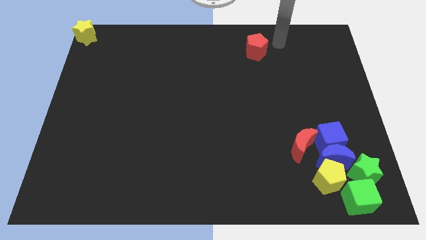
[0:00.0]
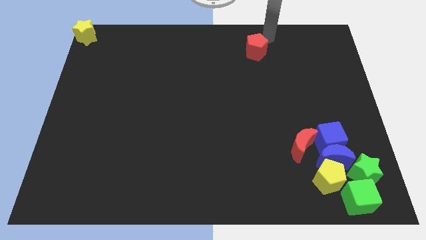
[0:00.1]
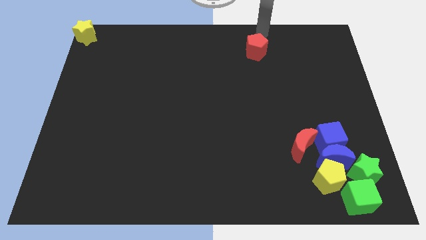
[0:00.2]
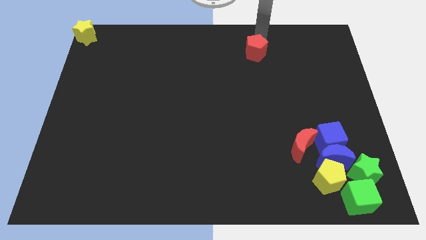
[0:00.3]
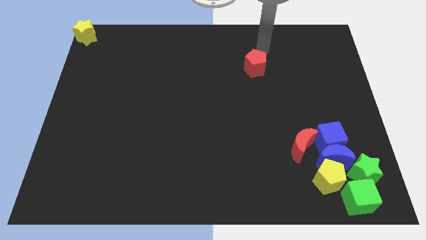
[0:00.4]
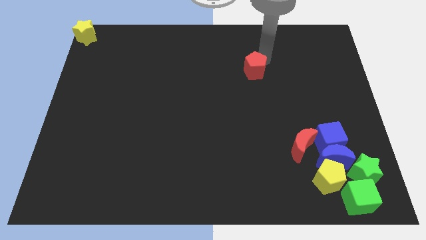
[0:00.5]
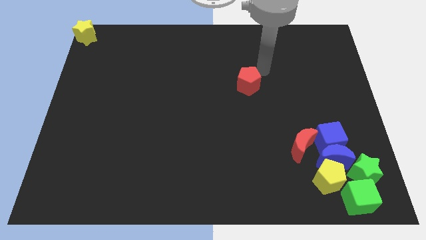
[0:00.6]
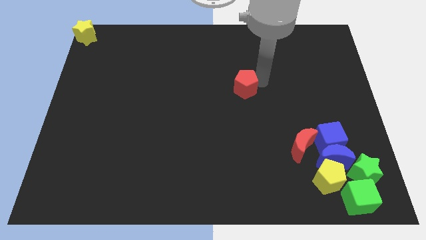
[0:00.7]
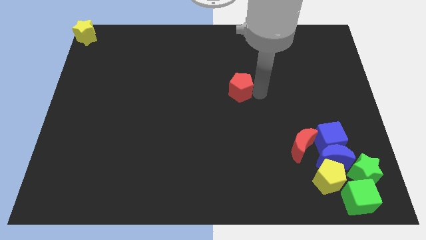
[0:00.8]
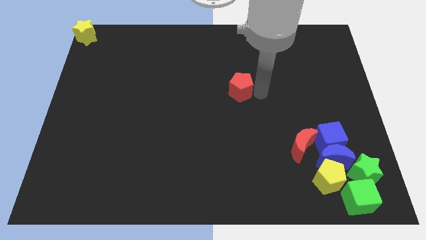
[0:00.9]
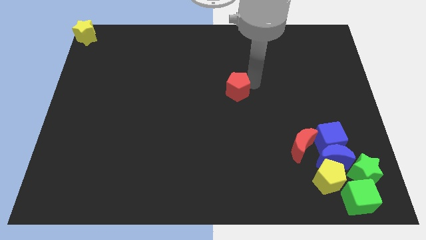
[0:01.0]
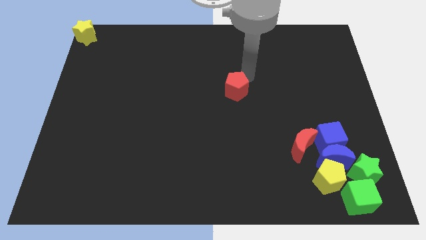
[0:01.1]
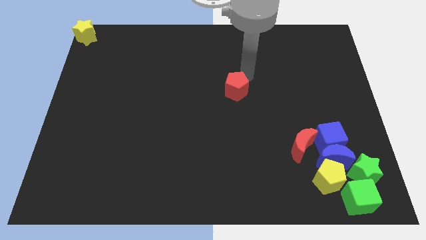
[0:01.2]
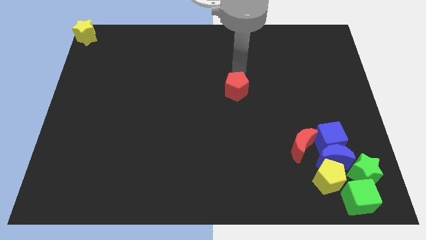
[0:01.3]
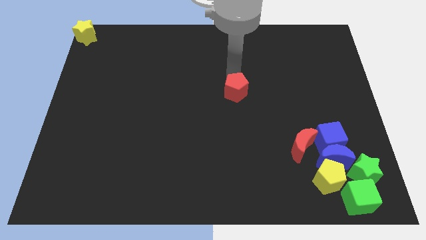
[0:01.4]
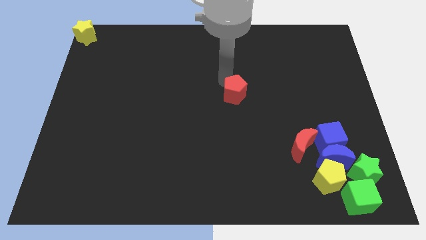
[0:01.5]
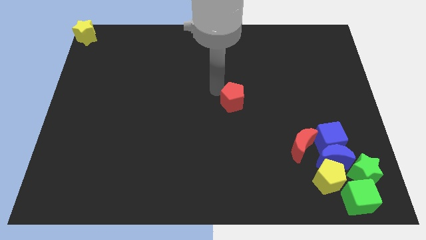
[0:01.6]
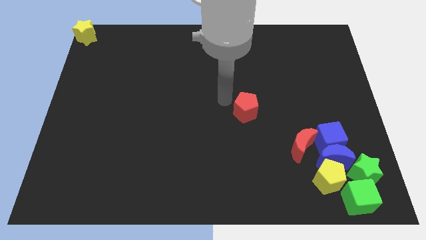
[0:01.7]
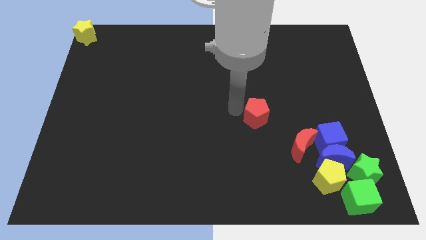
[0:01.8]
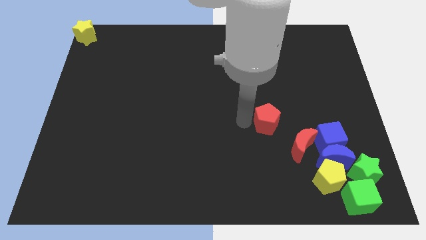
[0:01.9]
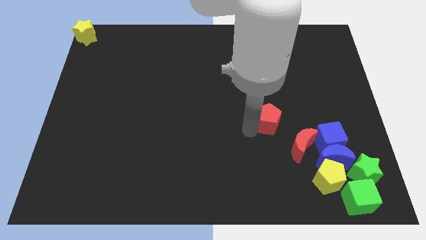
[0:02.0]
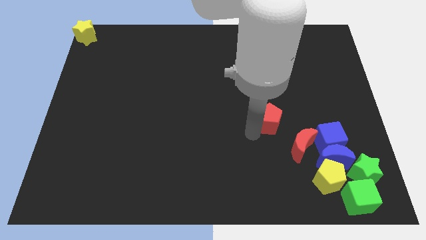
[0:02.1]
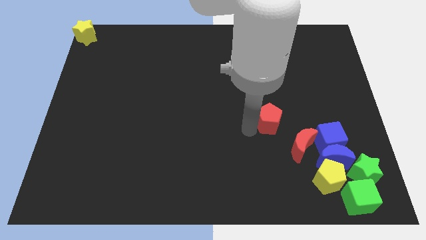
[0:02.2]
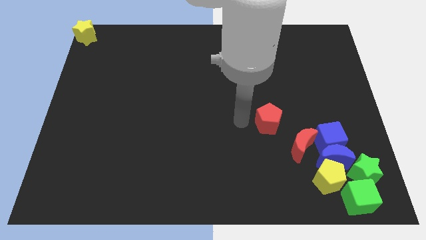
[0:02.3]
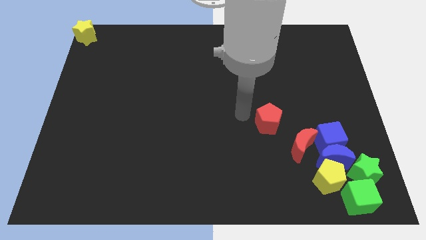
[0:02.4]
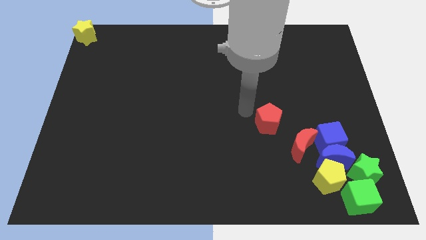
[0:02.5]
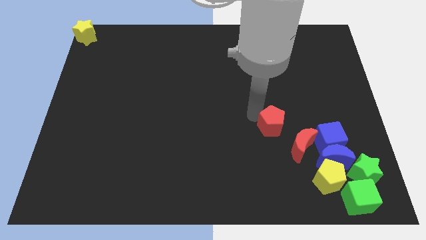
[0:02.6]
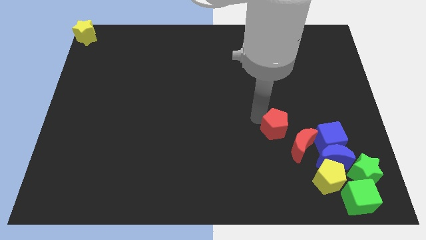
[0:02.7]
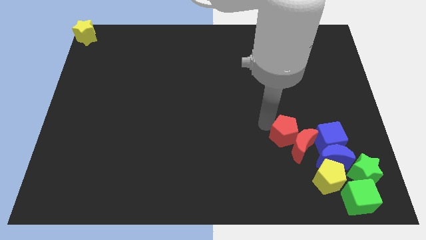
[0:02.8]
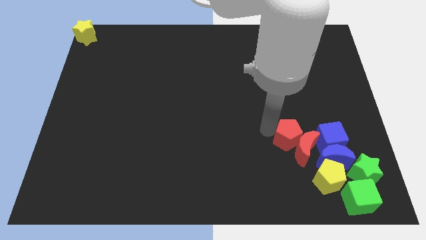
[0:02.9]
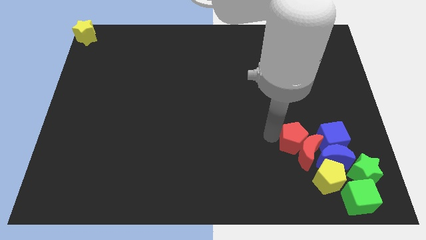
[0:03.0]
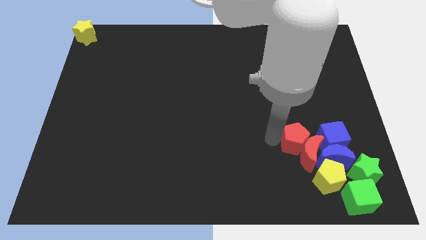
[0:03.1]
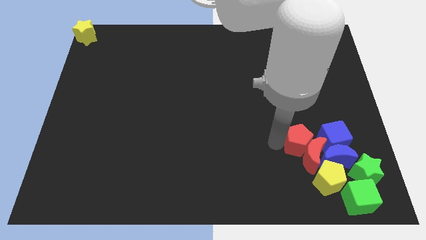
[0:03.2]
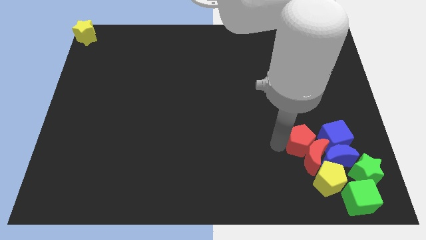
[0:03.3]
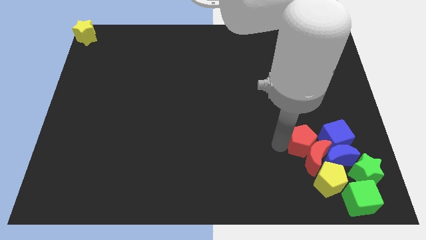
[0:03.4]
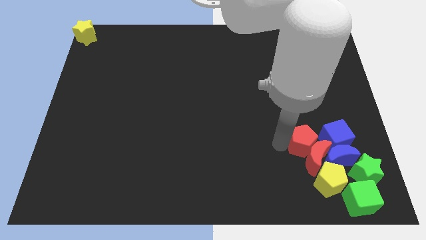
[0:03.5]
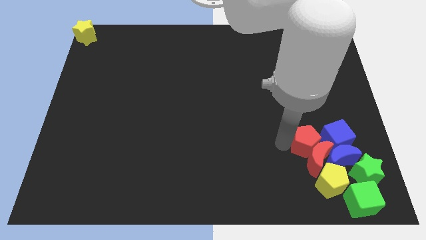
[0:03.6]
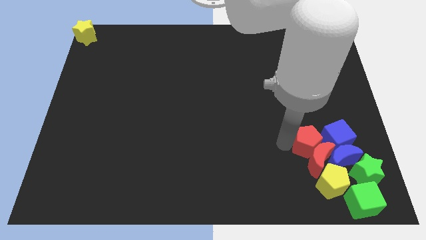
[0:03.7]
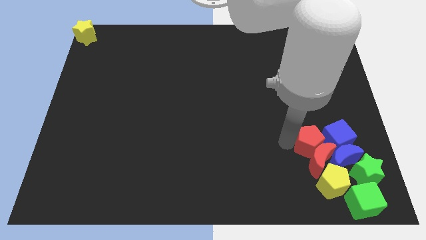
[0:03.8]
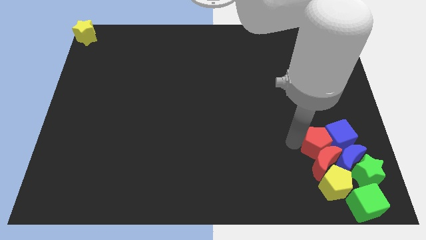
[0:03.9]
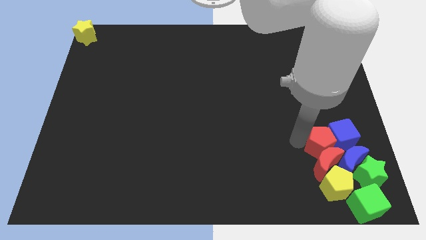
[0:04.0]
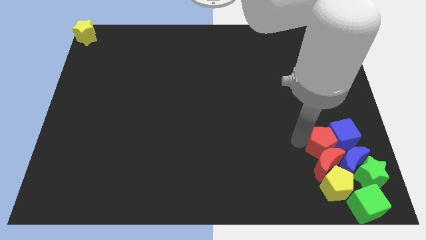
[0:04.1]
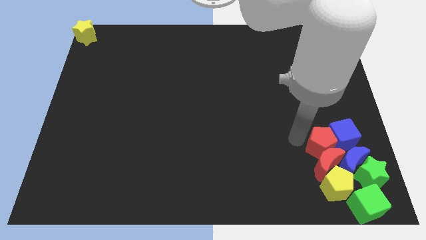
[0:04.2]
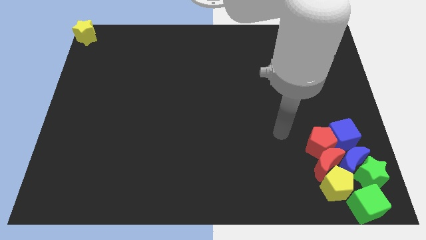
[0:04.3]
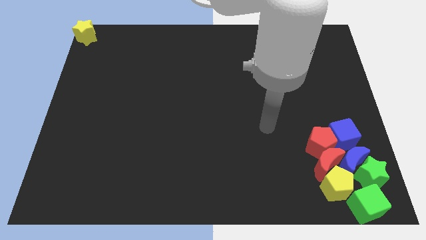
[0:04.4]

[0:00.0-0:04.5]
push the red pentagon into a group of blocks

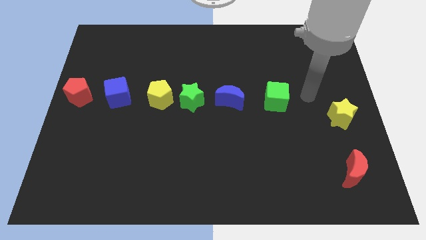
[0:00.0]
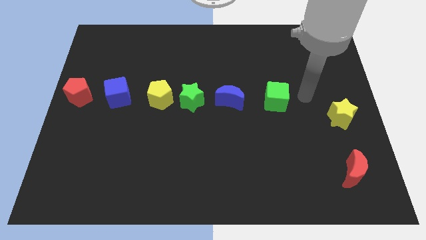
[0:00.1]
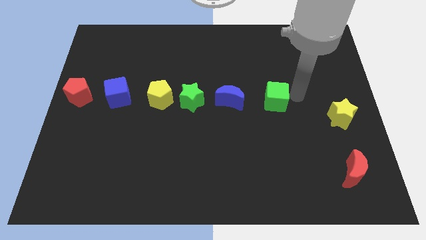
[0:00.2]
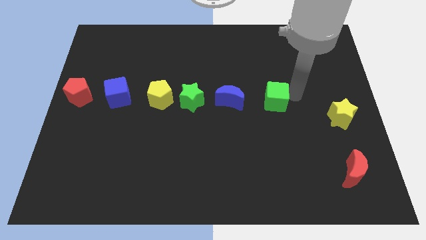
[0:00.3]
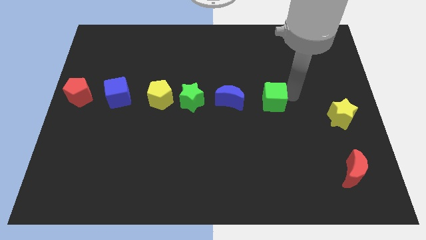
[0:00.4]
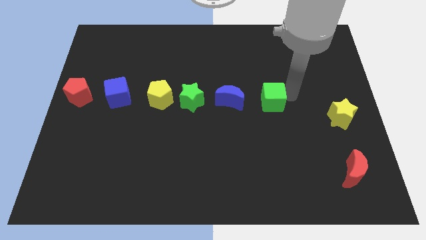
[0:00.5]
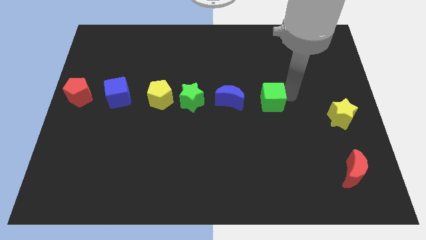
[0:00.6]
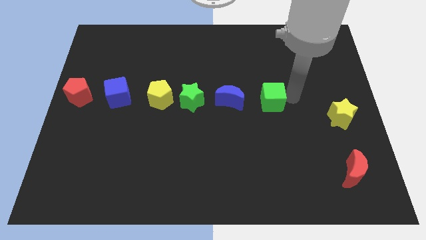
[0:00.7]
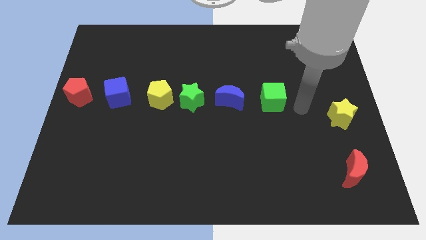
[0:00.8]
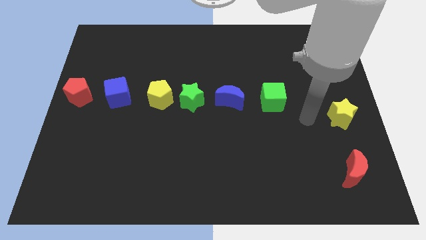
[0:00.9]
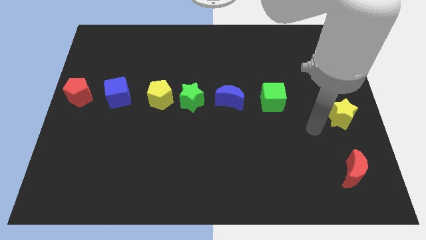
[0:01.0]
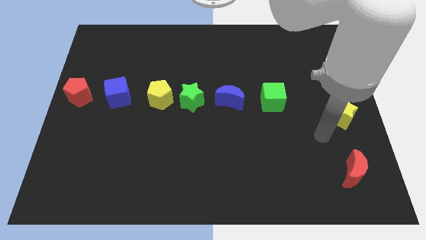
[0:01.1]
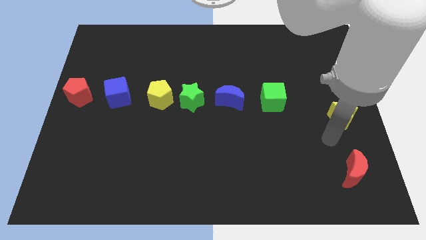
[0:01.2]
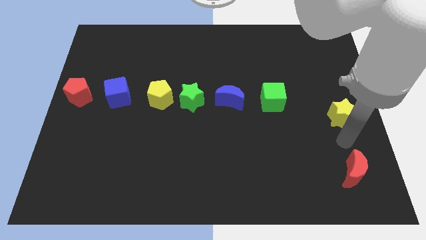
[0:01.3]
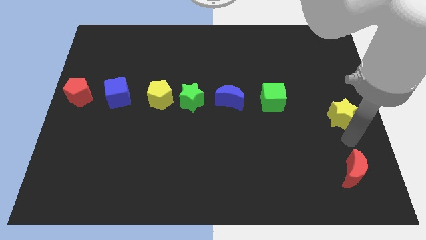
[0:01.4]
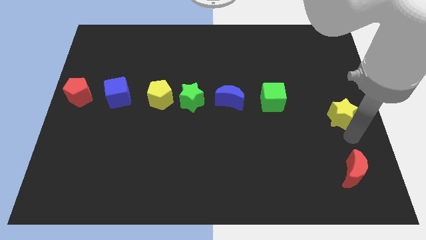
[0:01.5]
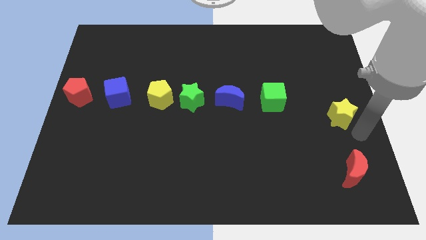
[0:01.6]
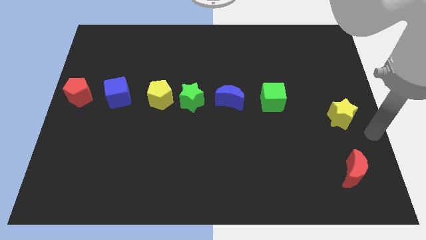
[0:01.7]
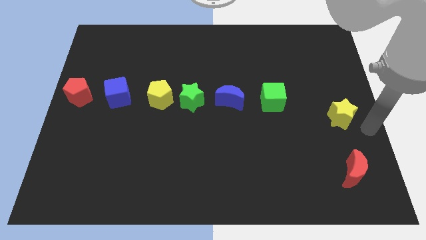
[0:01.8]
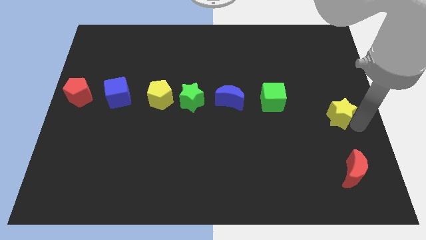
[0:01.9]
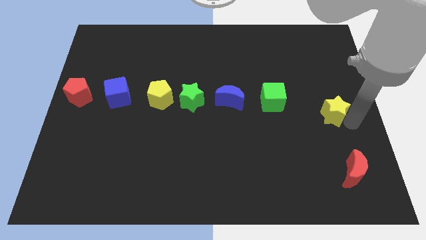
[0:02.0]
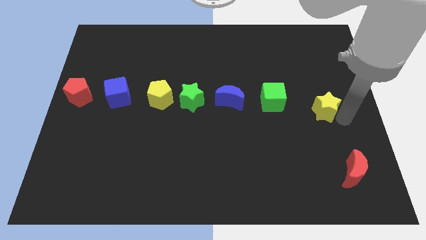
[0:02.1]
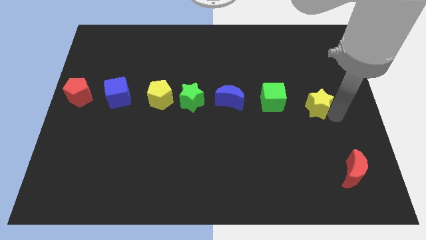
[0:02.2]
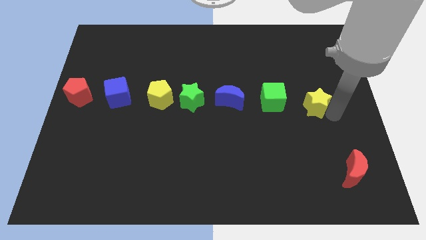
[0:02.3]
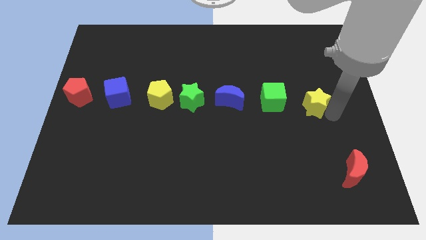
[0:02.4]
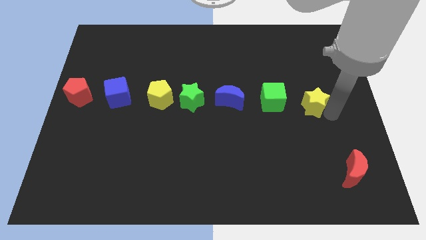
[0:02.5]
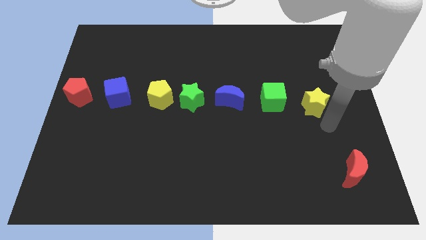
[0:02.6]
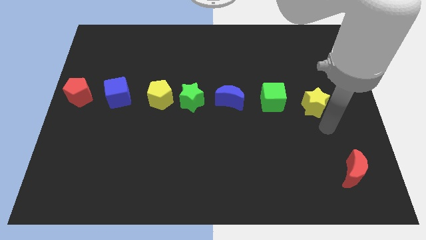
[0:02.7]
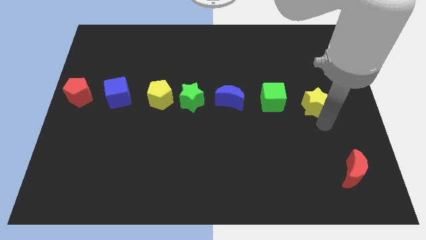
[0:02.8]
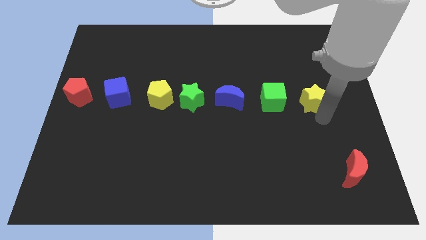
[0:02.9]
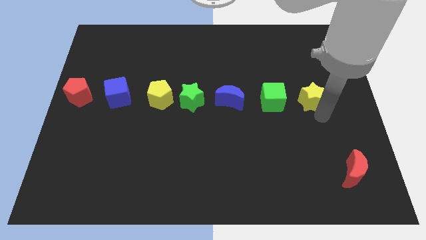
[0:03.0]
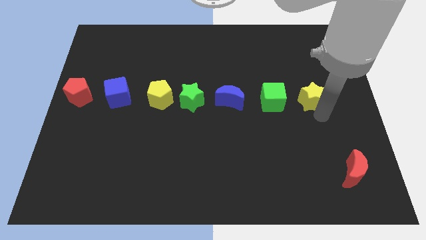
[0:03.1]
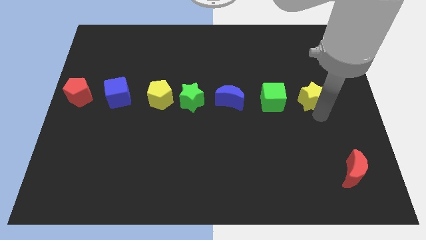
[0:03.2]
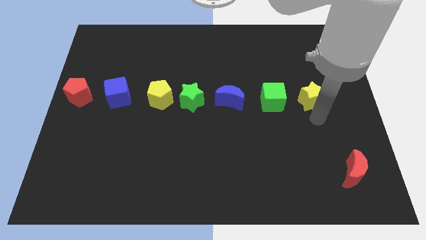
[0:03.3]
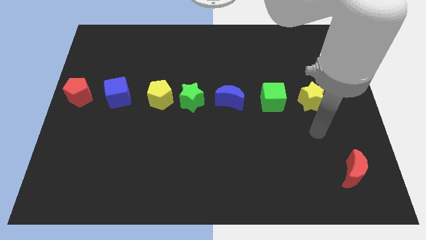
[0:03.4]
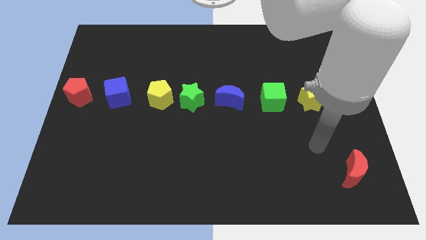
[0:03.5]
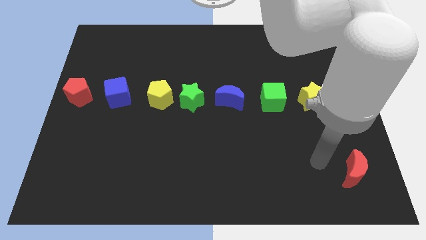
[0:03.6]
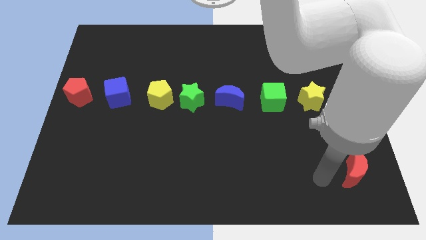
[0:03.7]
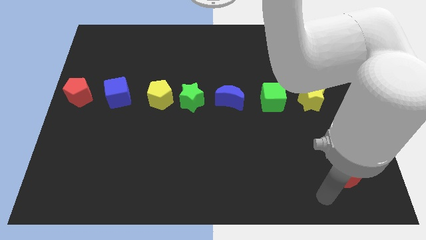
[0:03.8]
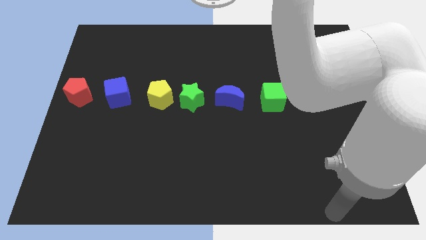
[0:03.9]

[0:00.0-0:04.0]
place yellow star to the right of the green cube

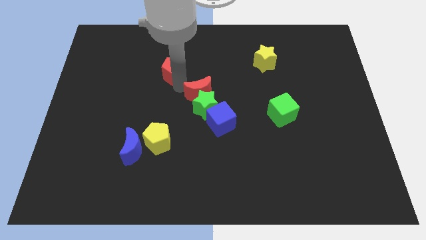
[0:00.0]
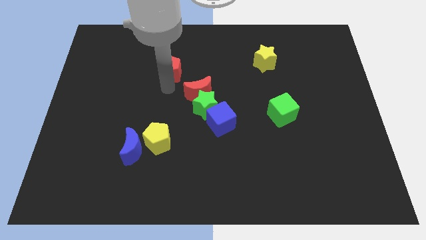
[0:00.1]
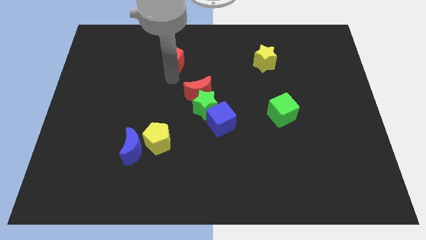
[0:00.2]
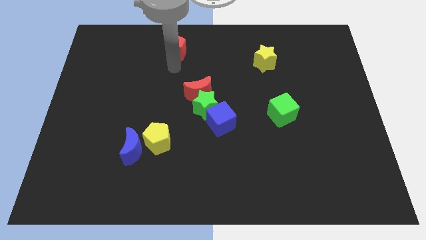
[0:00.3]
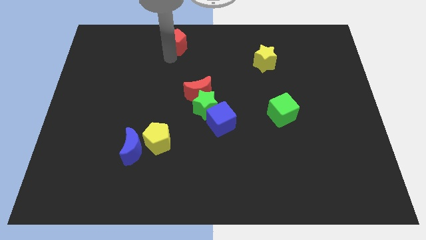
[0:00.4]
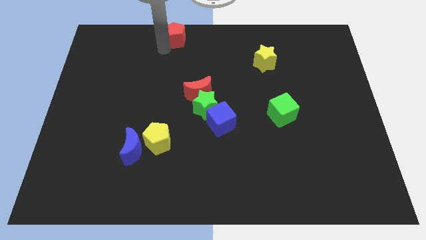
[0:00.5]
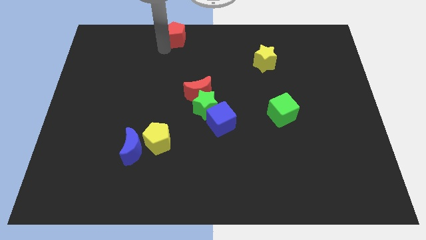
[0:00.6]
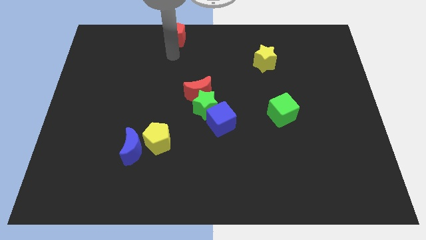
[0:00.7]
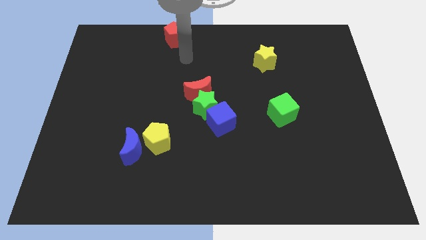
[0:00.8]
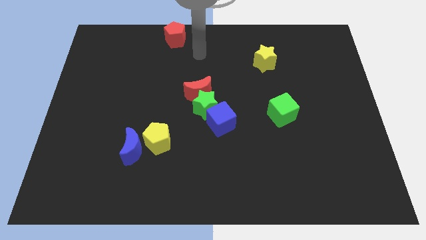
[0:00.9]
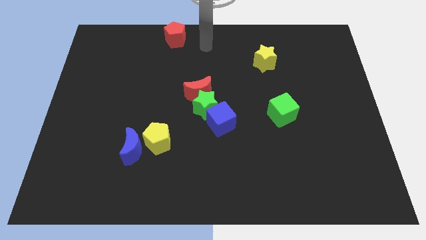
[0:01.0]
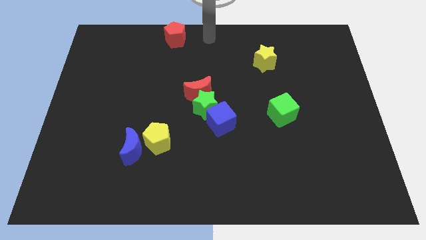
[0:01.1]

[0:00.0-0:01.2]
push the red pentagon to the top
